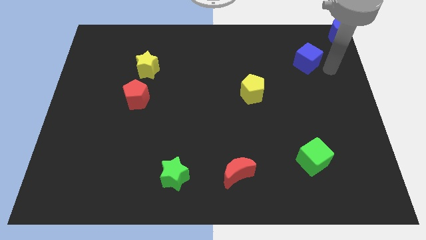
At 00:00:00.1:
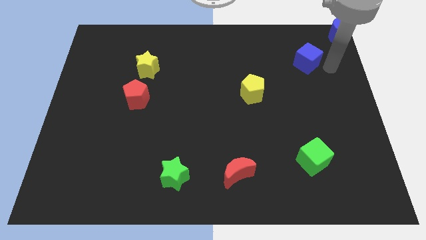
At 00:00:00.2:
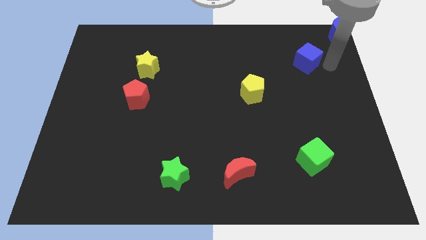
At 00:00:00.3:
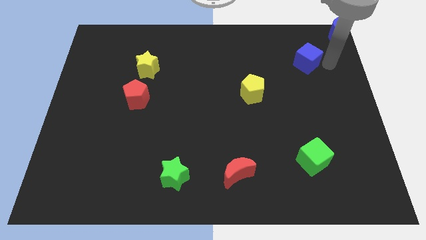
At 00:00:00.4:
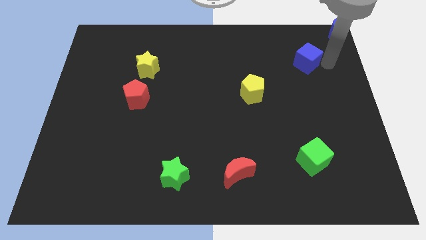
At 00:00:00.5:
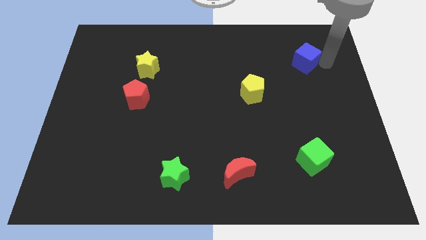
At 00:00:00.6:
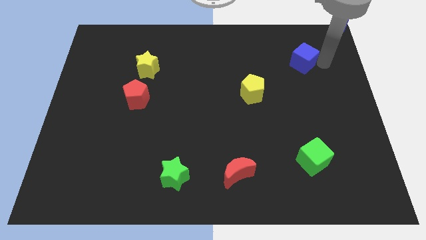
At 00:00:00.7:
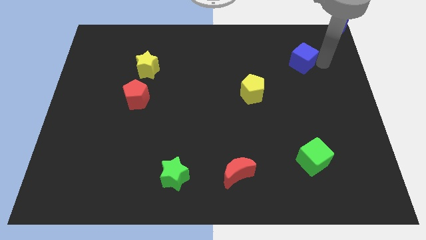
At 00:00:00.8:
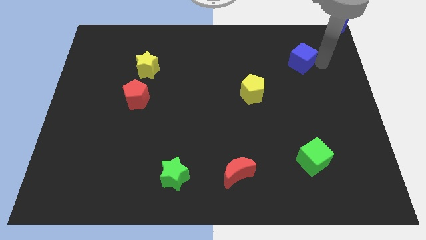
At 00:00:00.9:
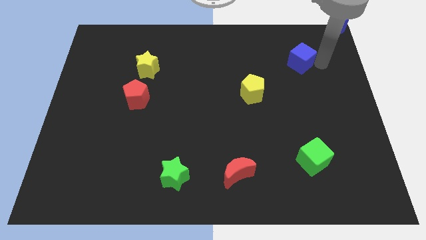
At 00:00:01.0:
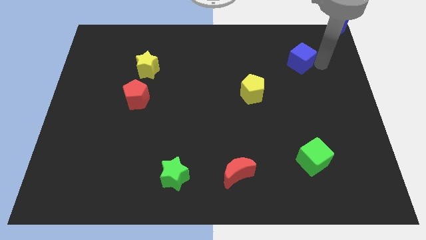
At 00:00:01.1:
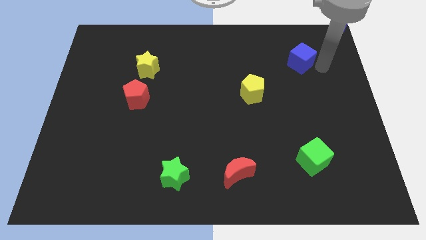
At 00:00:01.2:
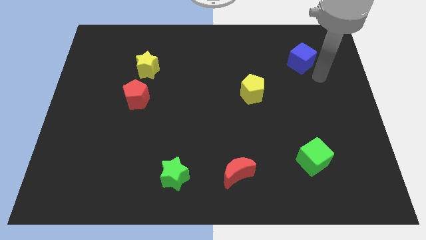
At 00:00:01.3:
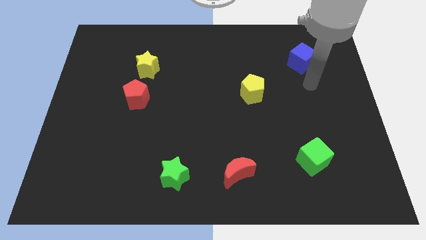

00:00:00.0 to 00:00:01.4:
slightly push the blue cube towards the top to form a line

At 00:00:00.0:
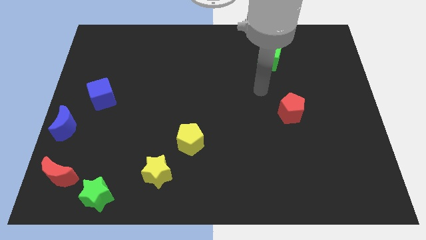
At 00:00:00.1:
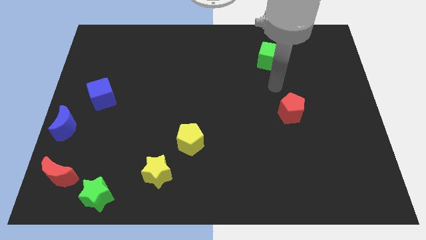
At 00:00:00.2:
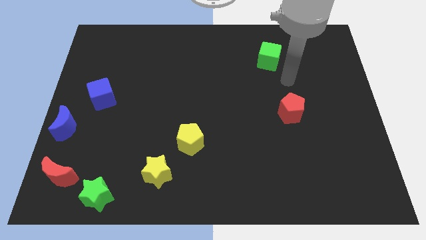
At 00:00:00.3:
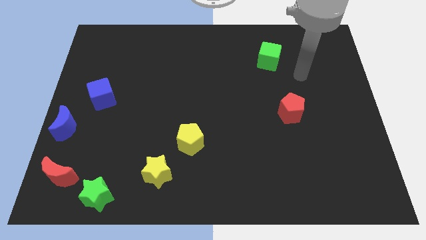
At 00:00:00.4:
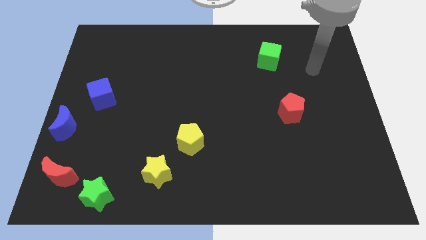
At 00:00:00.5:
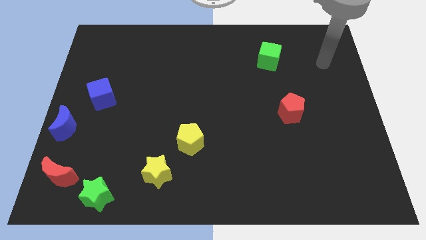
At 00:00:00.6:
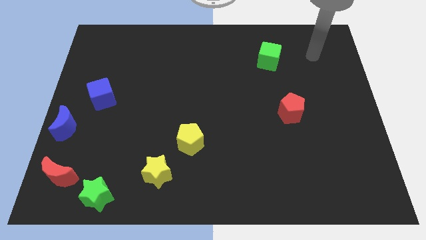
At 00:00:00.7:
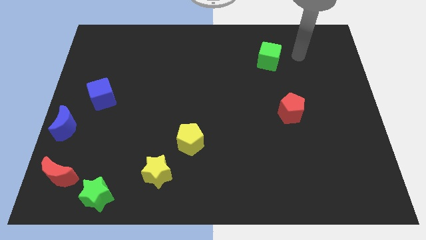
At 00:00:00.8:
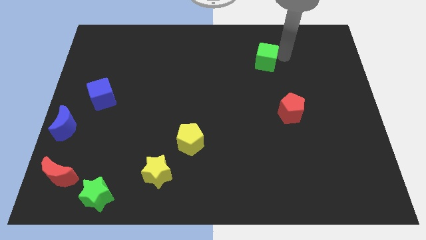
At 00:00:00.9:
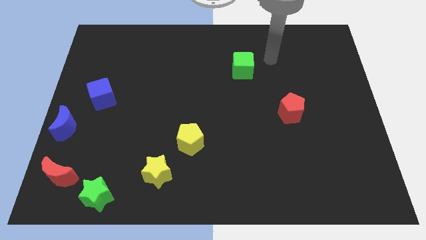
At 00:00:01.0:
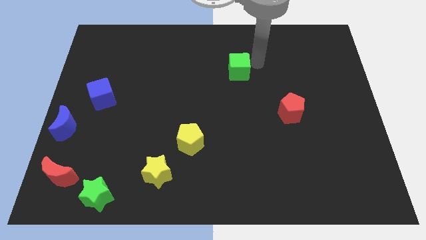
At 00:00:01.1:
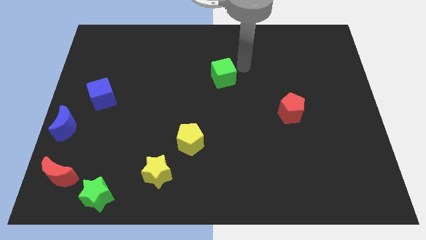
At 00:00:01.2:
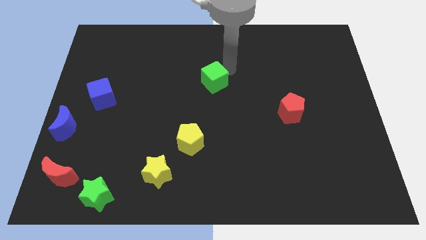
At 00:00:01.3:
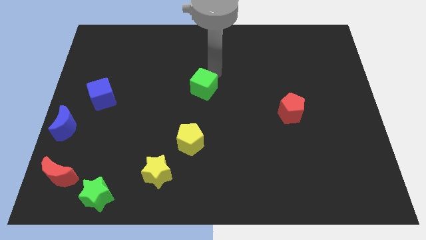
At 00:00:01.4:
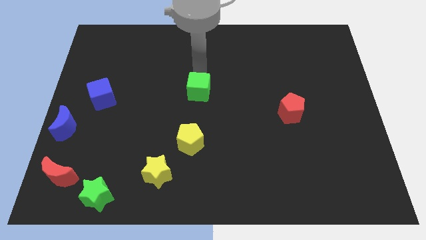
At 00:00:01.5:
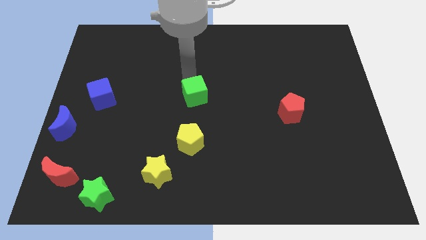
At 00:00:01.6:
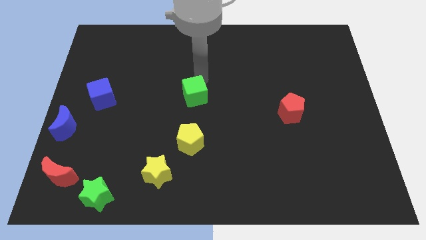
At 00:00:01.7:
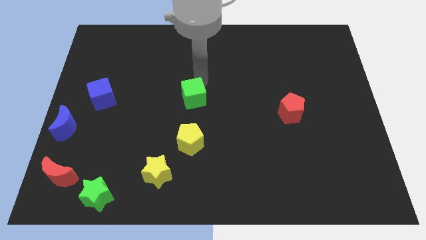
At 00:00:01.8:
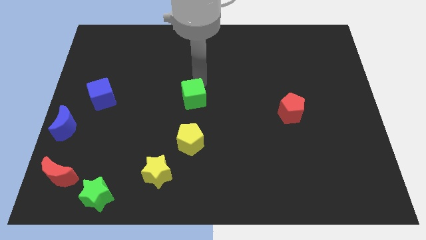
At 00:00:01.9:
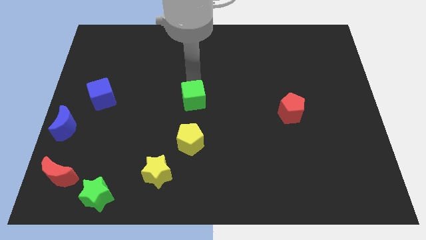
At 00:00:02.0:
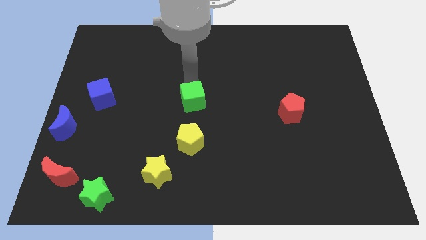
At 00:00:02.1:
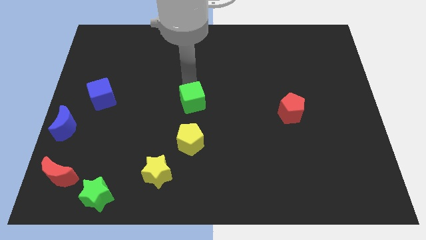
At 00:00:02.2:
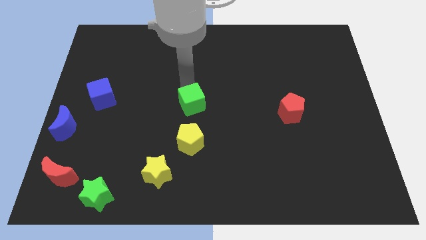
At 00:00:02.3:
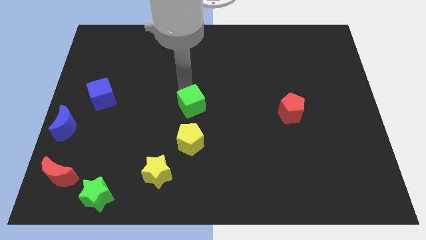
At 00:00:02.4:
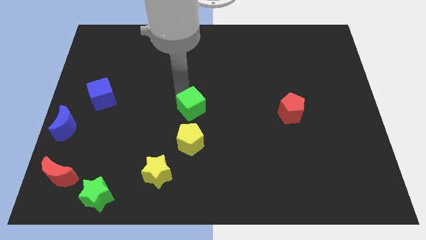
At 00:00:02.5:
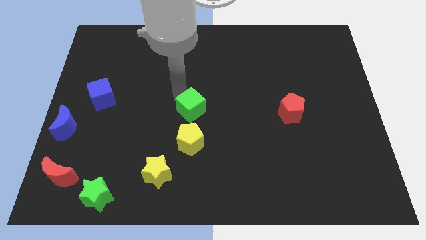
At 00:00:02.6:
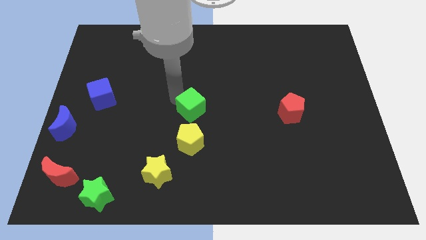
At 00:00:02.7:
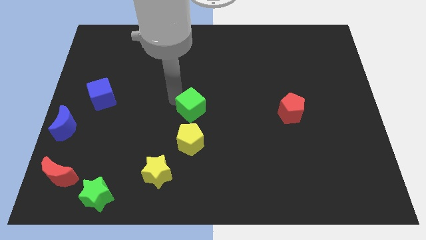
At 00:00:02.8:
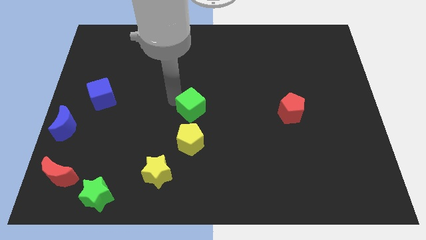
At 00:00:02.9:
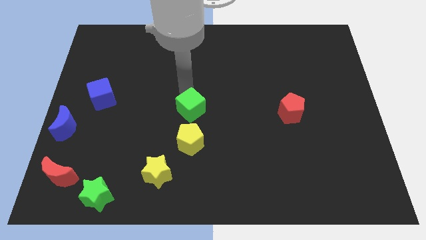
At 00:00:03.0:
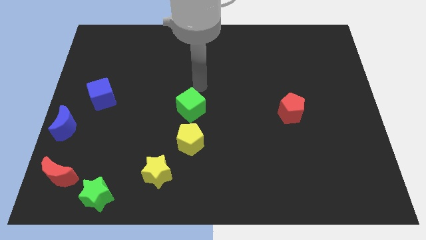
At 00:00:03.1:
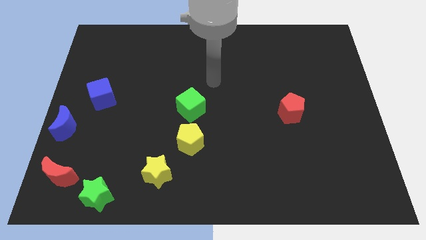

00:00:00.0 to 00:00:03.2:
push the green cube to the top of the yellow pentagon

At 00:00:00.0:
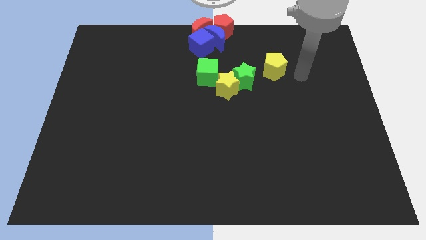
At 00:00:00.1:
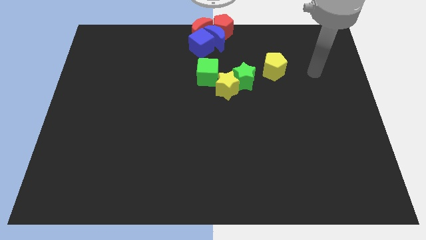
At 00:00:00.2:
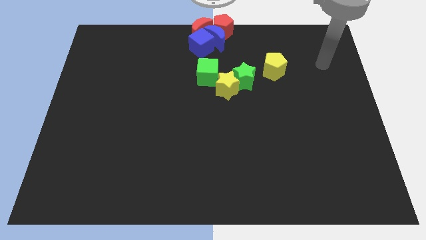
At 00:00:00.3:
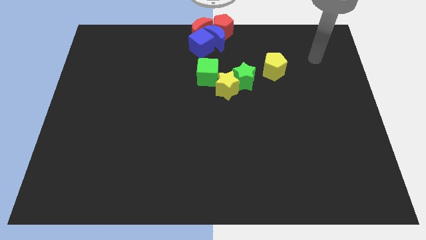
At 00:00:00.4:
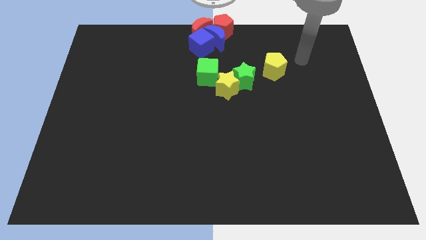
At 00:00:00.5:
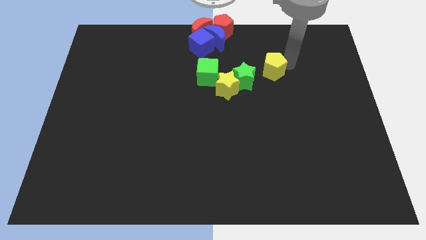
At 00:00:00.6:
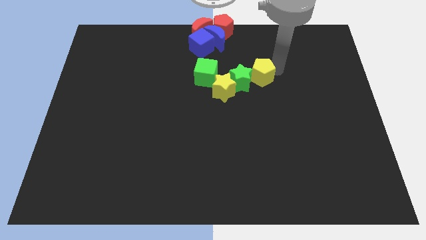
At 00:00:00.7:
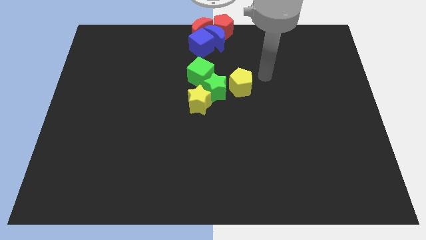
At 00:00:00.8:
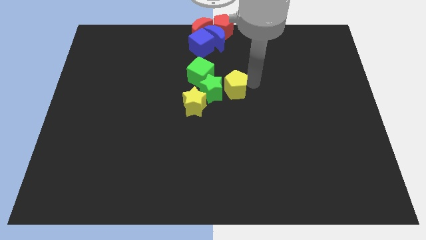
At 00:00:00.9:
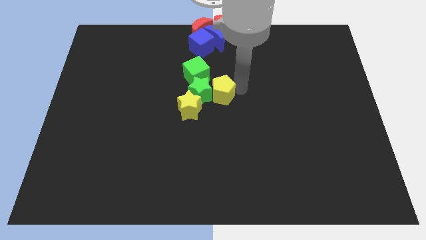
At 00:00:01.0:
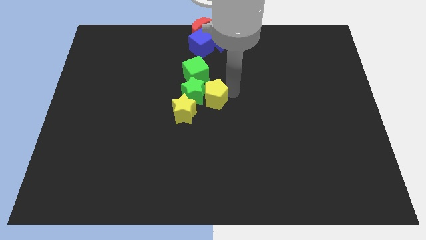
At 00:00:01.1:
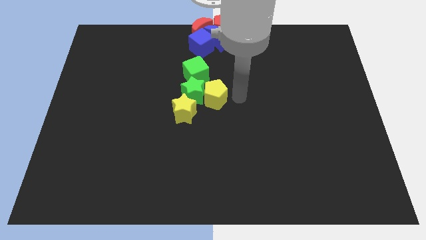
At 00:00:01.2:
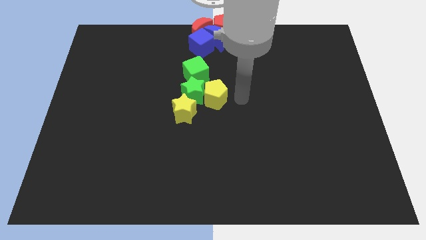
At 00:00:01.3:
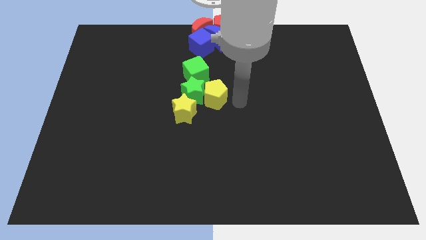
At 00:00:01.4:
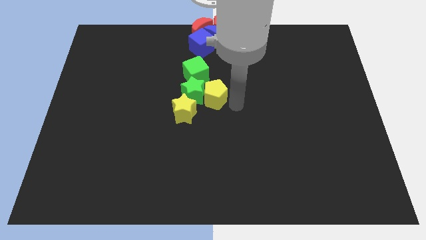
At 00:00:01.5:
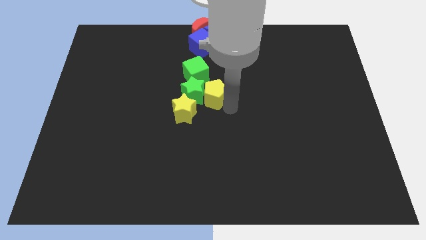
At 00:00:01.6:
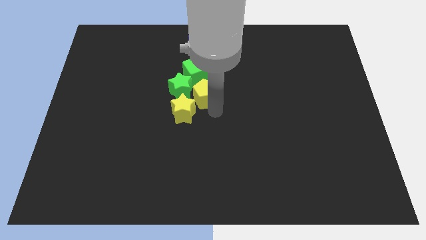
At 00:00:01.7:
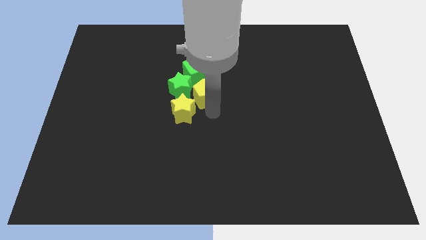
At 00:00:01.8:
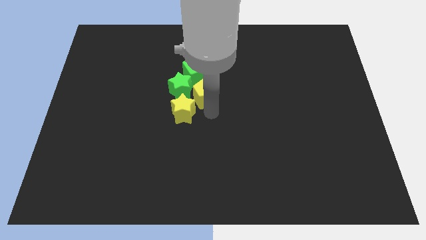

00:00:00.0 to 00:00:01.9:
drag the yellow pentagon to the center

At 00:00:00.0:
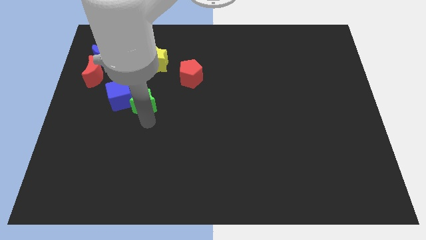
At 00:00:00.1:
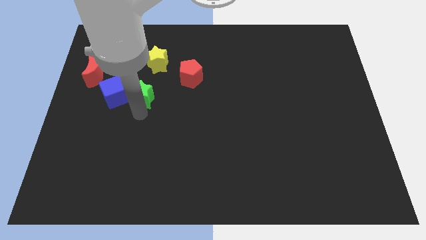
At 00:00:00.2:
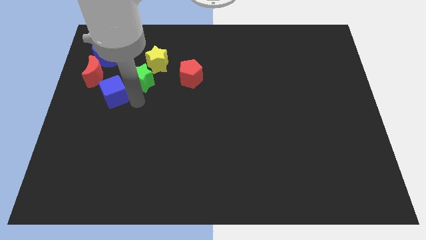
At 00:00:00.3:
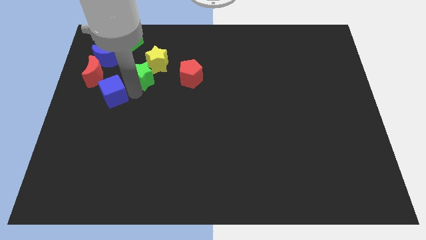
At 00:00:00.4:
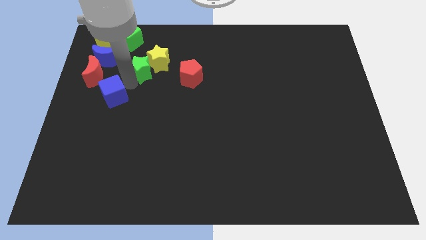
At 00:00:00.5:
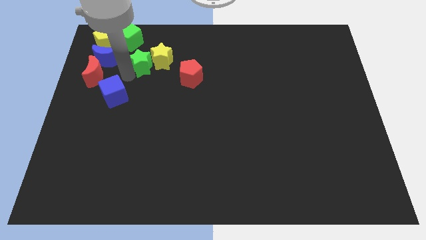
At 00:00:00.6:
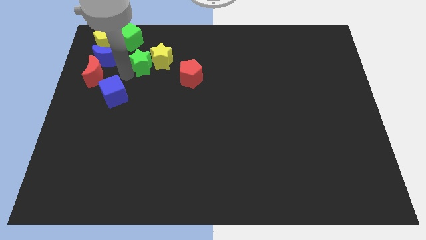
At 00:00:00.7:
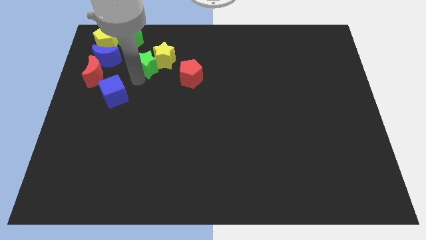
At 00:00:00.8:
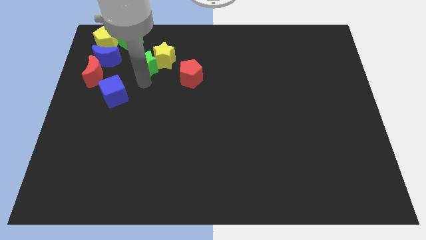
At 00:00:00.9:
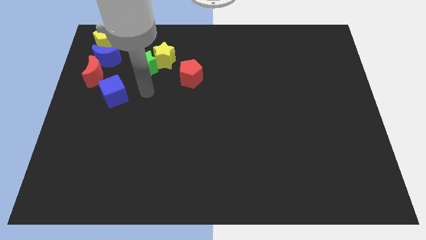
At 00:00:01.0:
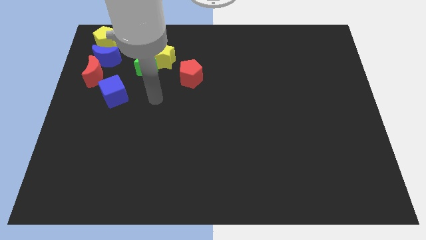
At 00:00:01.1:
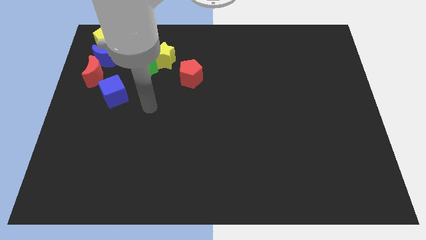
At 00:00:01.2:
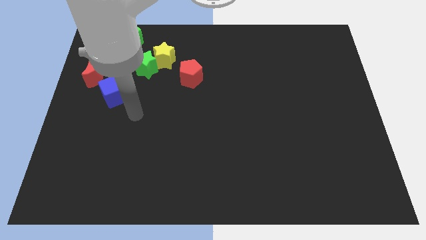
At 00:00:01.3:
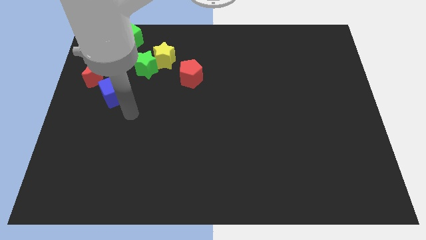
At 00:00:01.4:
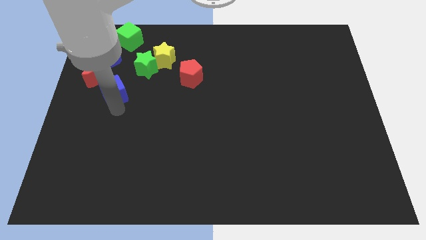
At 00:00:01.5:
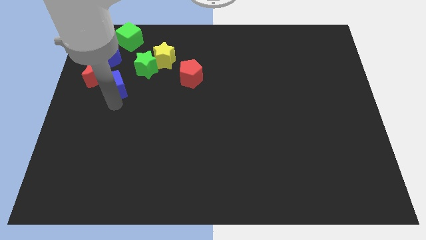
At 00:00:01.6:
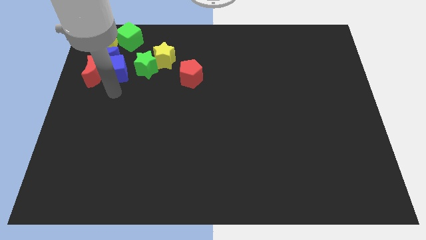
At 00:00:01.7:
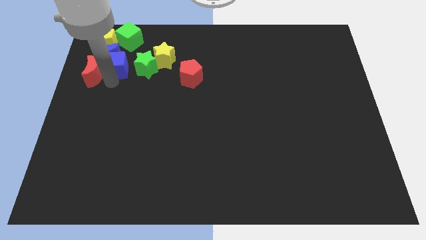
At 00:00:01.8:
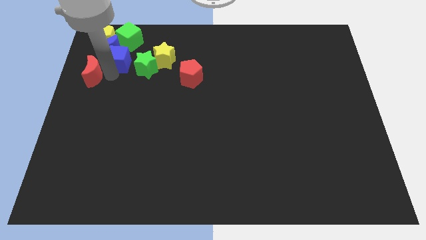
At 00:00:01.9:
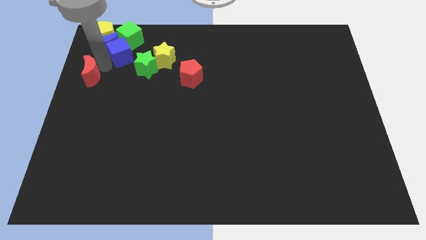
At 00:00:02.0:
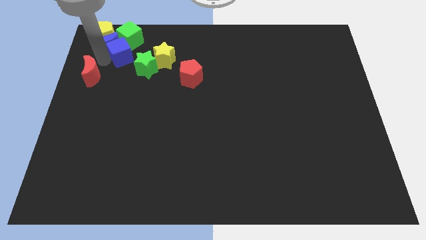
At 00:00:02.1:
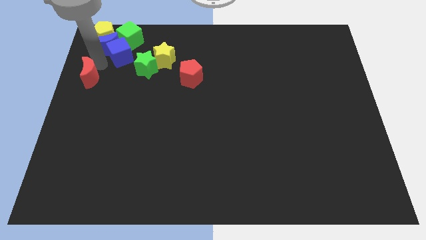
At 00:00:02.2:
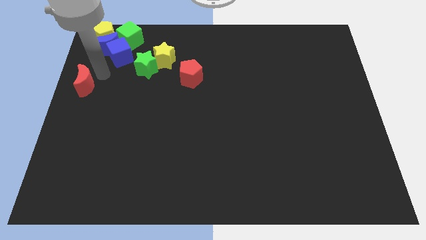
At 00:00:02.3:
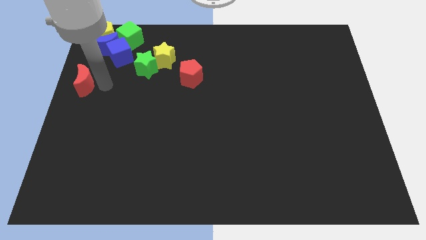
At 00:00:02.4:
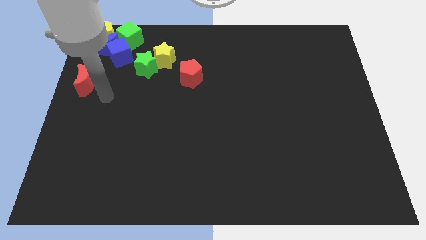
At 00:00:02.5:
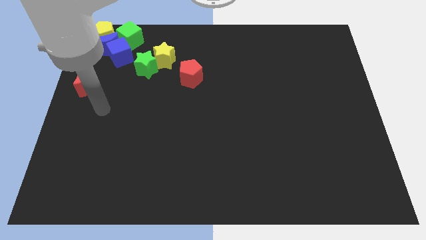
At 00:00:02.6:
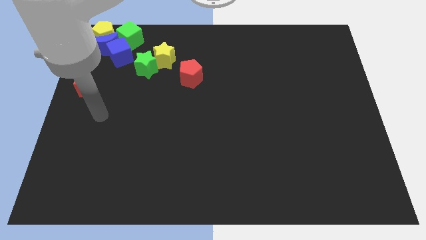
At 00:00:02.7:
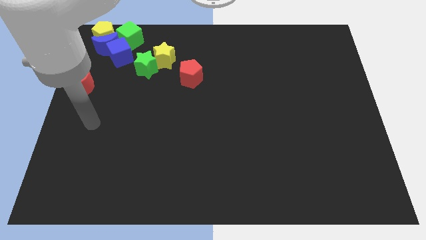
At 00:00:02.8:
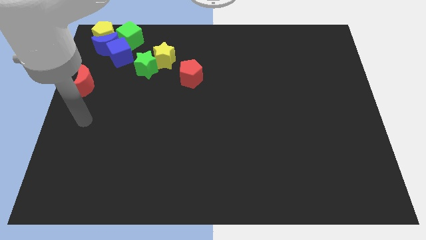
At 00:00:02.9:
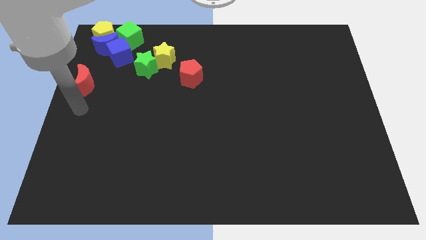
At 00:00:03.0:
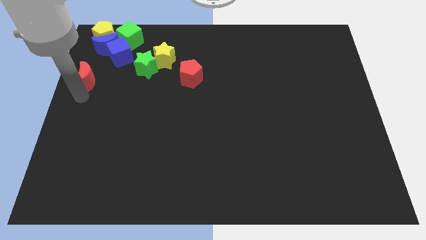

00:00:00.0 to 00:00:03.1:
separate the green star blue cube and the red crescent
